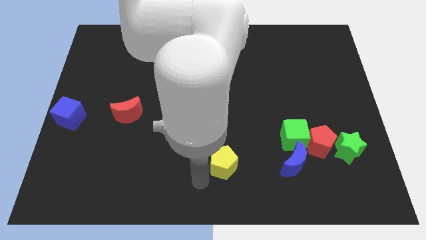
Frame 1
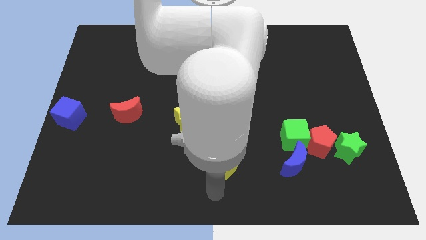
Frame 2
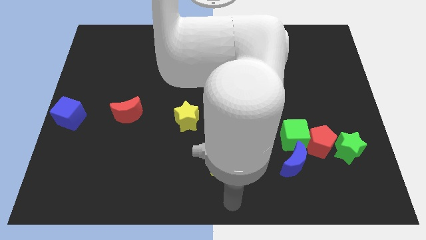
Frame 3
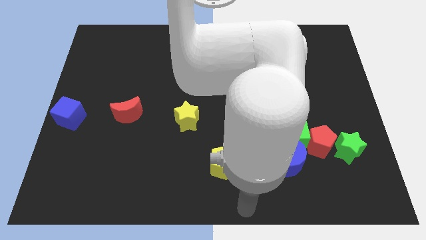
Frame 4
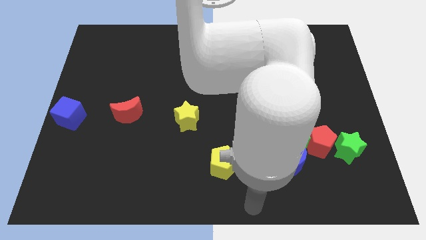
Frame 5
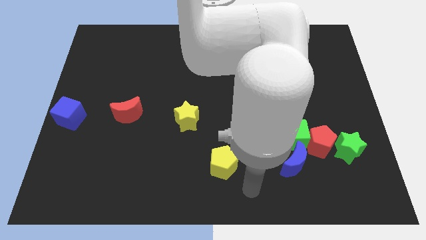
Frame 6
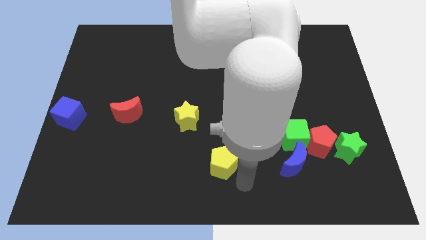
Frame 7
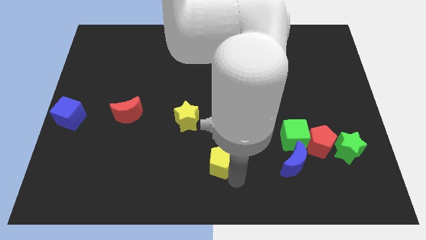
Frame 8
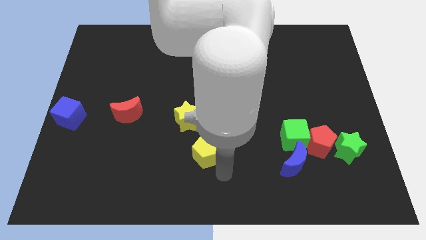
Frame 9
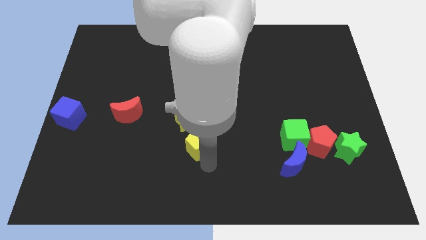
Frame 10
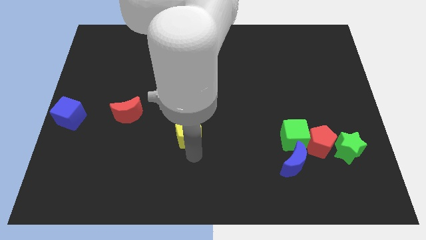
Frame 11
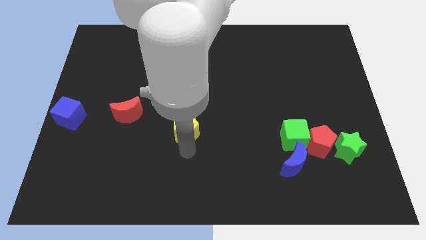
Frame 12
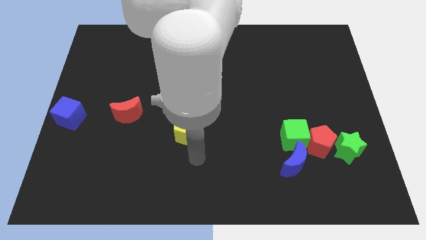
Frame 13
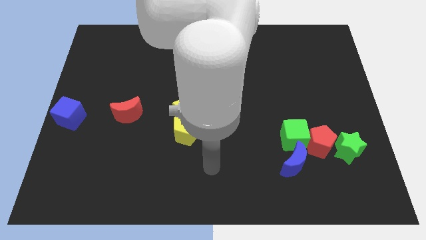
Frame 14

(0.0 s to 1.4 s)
move the yellow pentagon to the bottom side of the yellow star

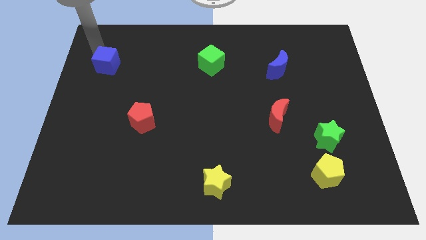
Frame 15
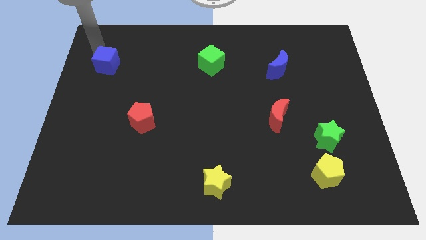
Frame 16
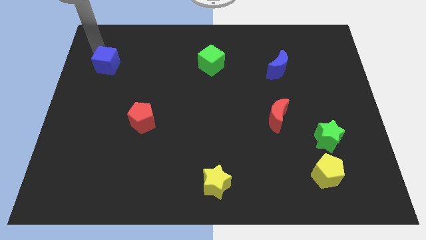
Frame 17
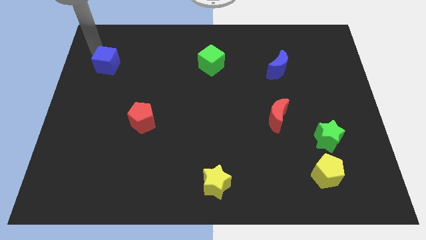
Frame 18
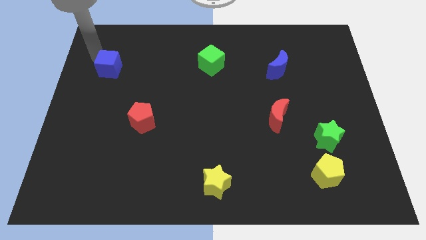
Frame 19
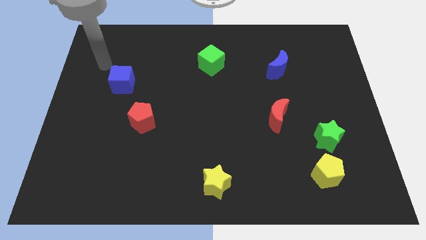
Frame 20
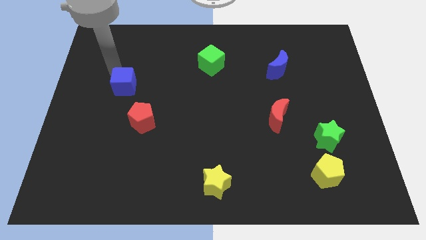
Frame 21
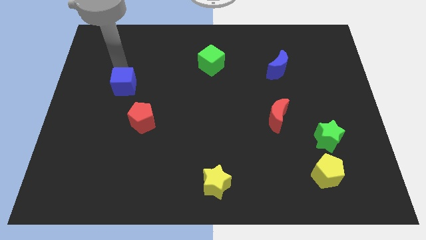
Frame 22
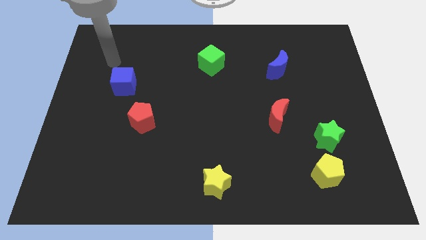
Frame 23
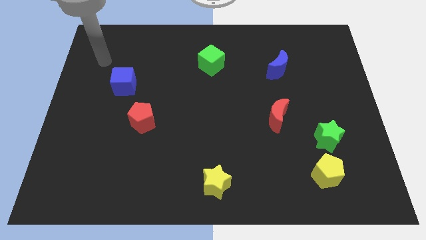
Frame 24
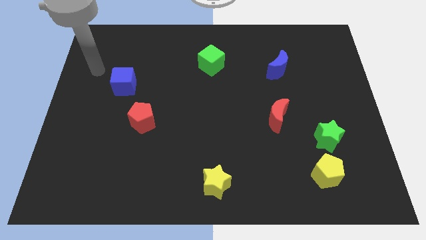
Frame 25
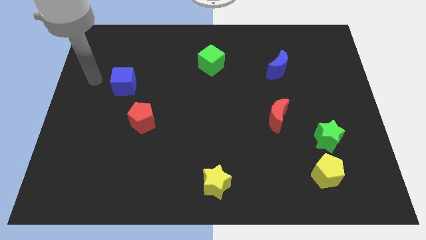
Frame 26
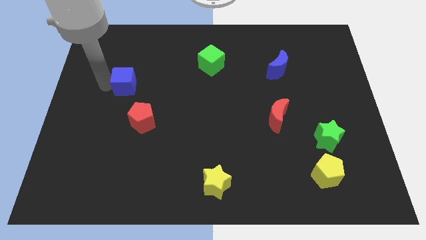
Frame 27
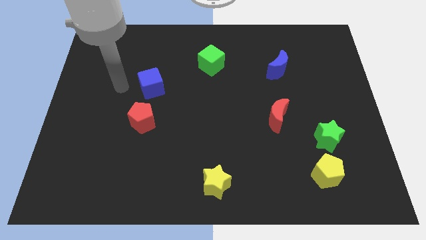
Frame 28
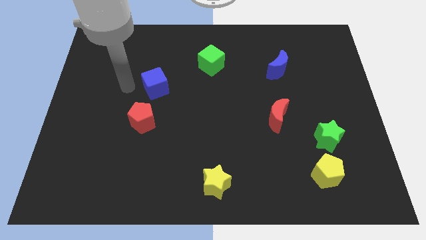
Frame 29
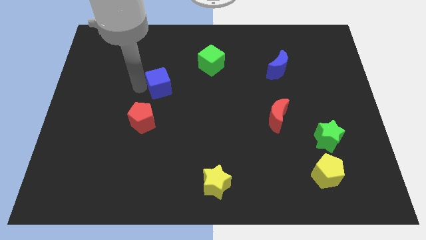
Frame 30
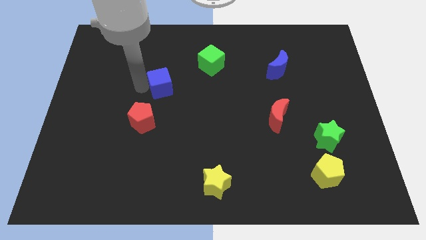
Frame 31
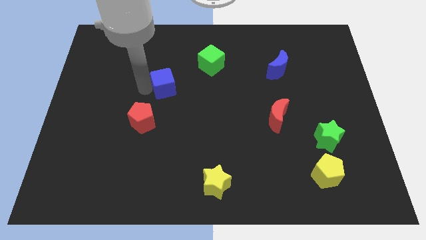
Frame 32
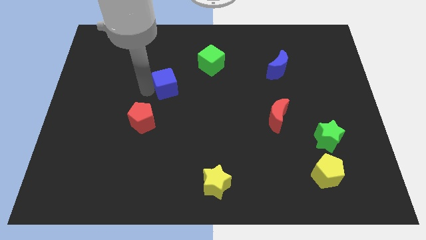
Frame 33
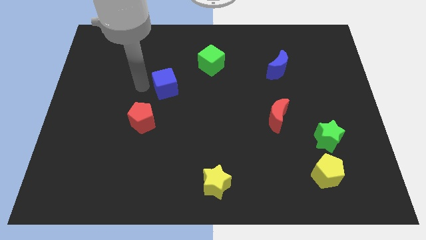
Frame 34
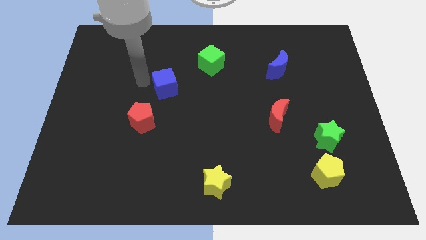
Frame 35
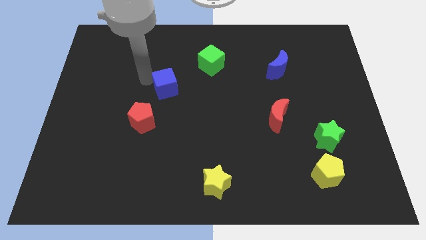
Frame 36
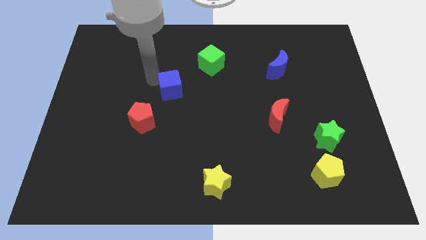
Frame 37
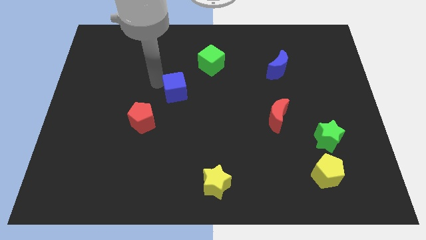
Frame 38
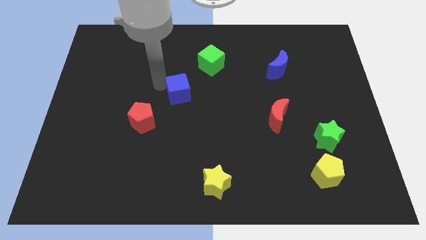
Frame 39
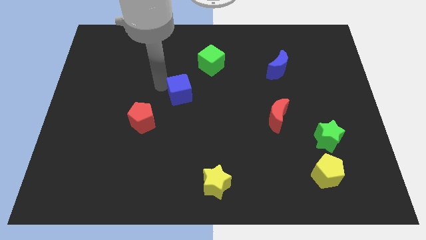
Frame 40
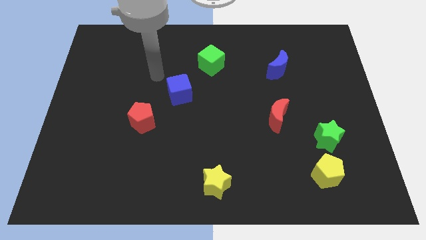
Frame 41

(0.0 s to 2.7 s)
push the blue cube diagonally in between the green cube and the red pentagon

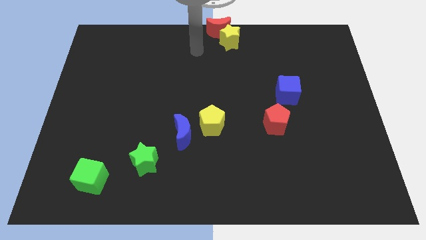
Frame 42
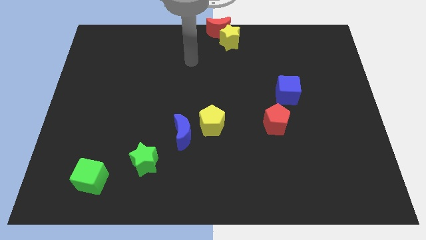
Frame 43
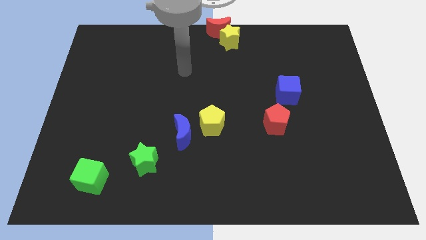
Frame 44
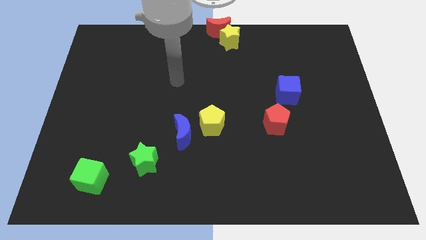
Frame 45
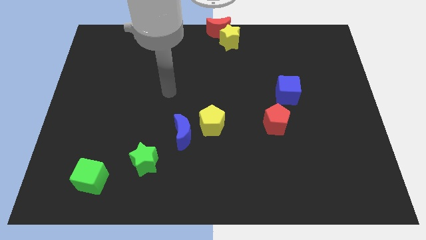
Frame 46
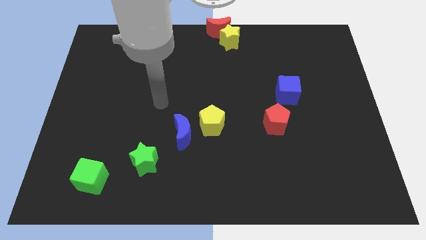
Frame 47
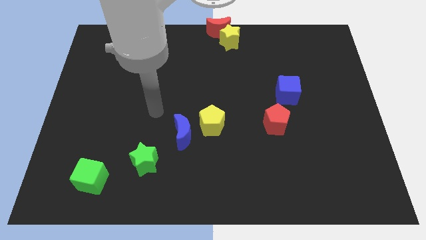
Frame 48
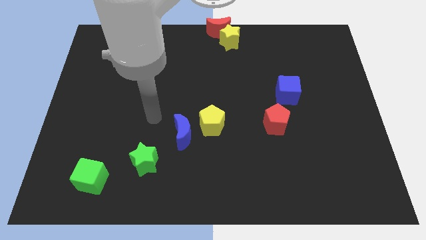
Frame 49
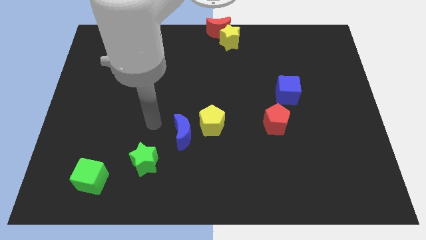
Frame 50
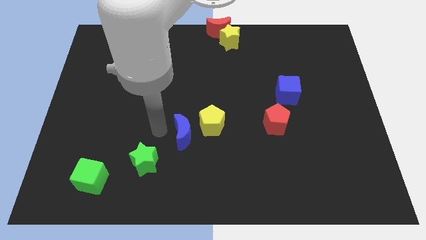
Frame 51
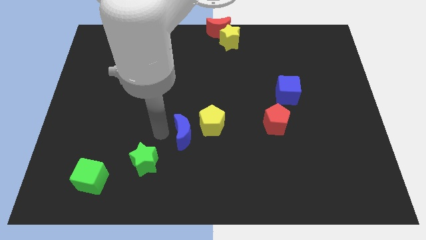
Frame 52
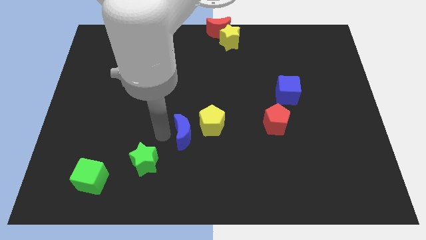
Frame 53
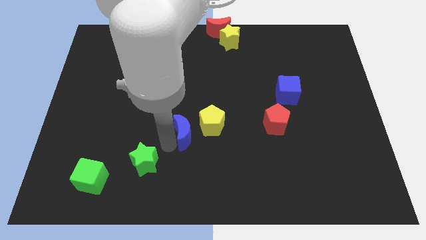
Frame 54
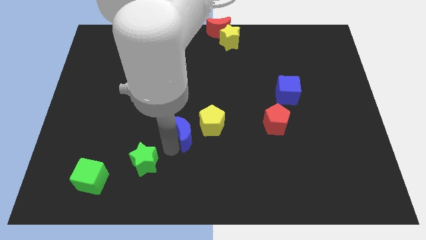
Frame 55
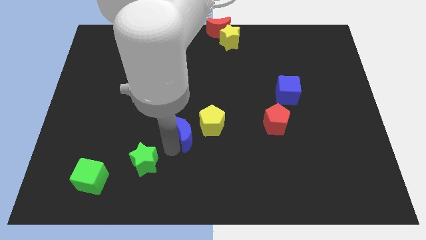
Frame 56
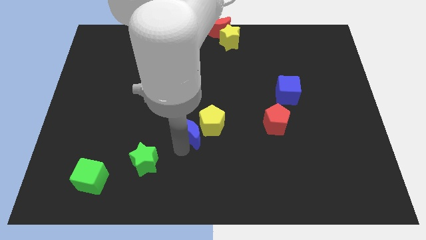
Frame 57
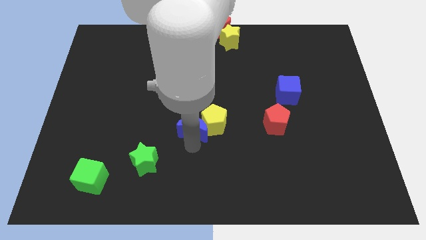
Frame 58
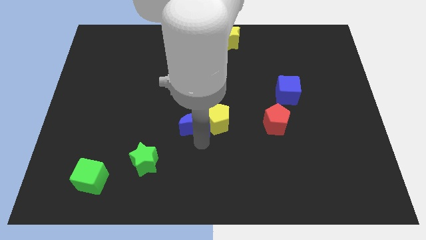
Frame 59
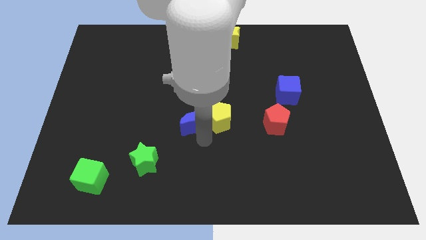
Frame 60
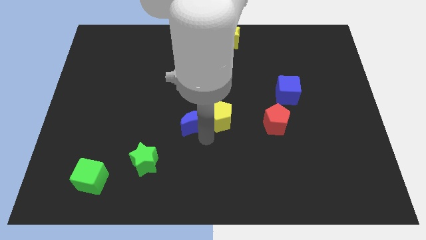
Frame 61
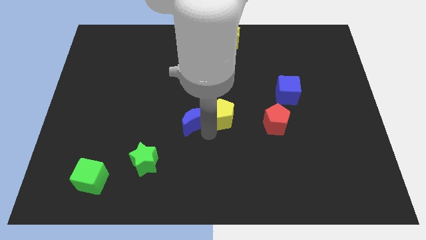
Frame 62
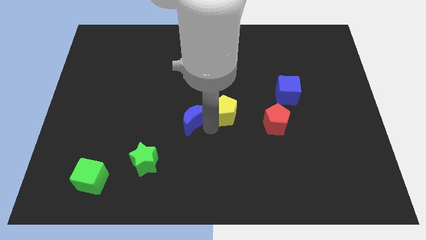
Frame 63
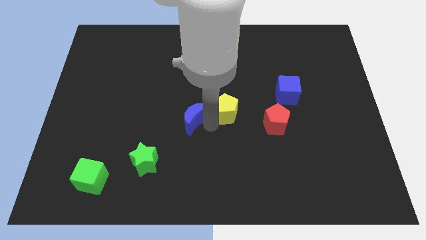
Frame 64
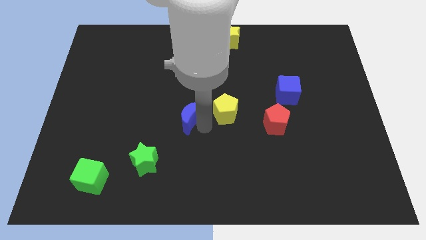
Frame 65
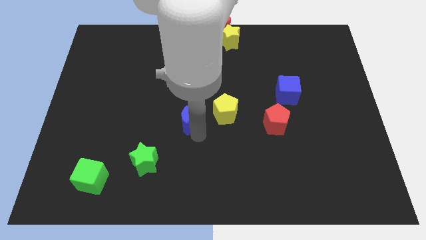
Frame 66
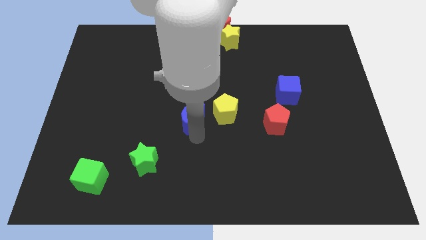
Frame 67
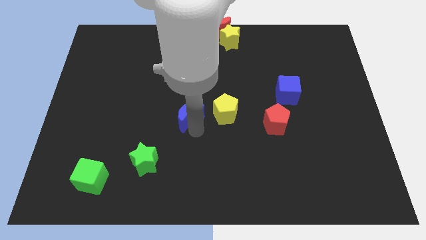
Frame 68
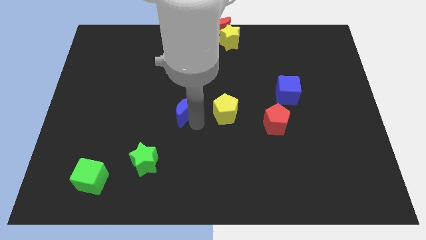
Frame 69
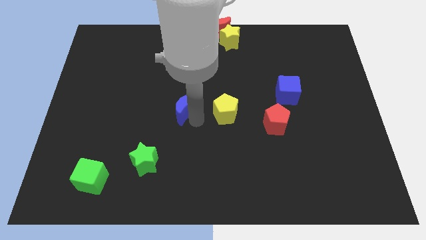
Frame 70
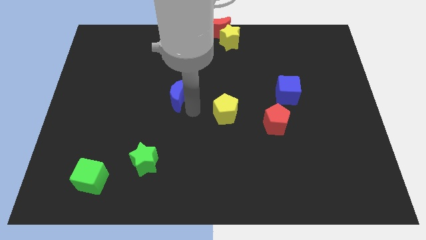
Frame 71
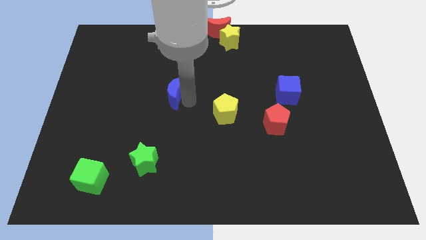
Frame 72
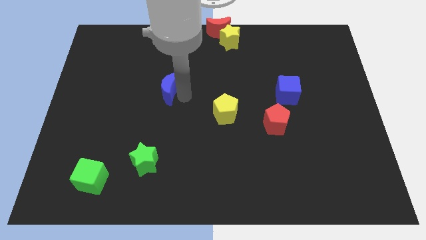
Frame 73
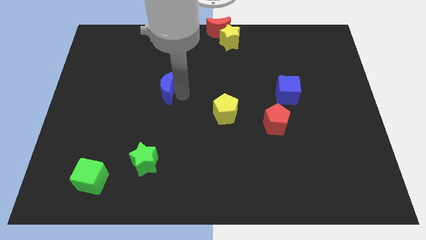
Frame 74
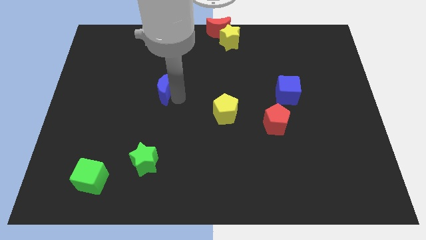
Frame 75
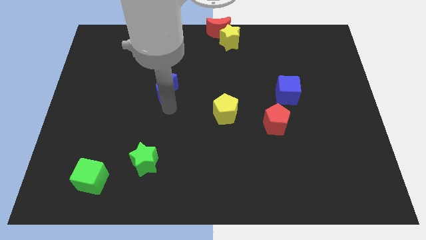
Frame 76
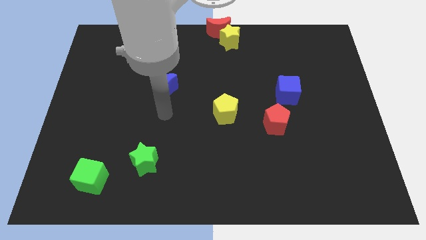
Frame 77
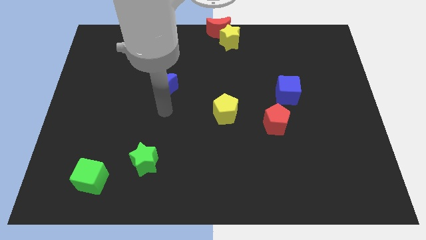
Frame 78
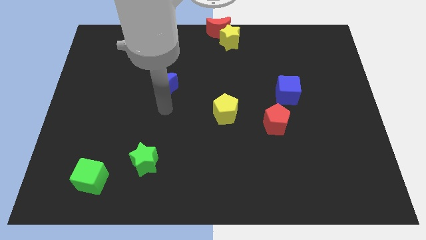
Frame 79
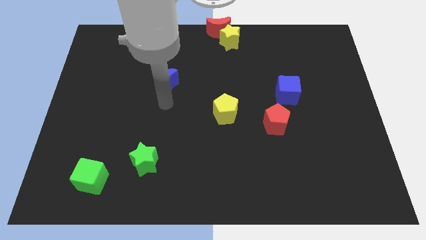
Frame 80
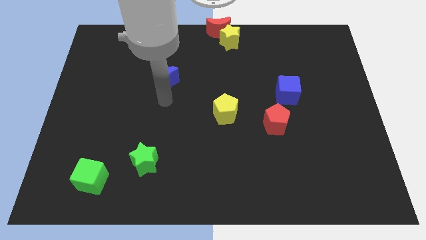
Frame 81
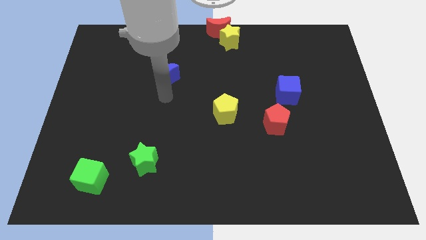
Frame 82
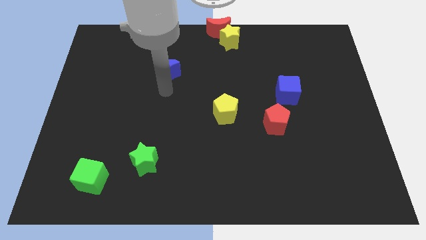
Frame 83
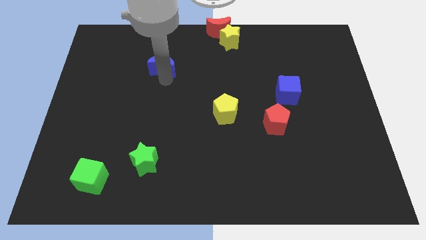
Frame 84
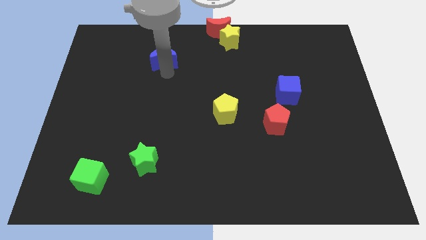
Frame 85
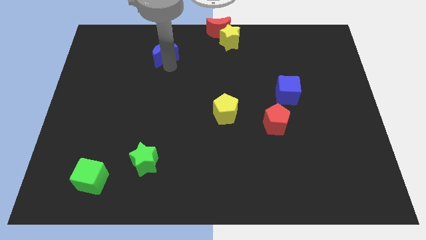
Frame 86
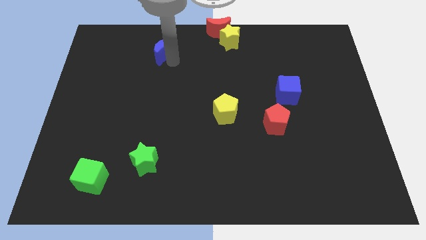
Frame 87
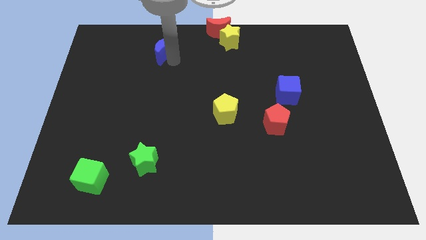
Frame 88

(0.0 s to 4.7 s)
move blue crescent upwards

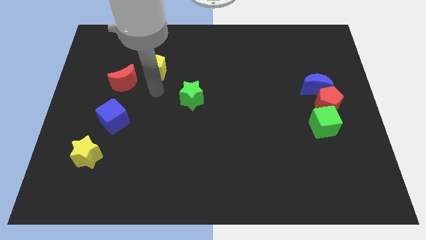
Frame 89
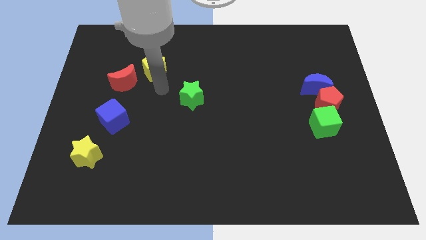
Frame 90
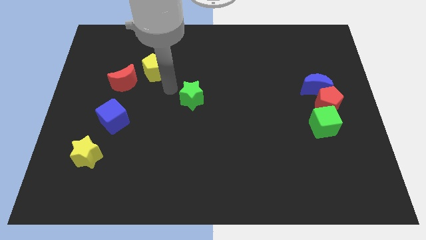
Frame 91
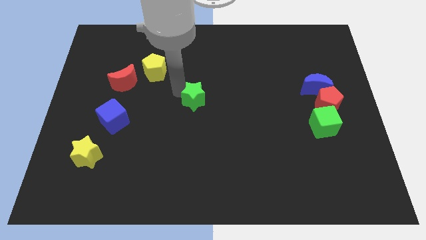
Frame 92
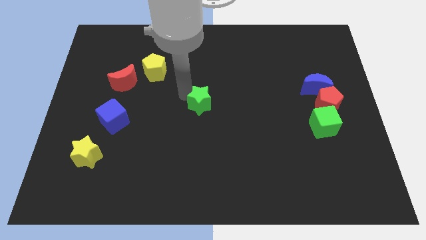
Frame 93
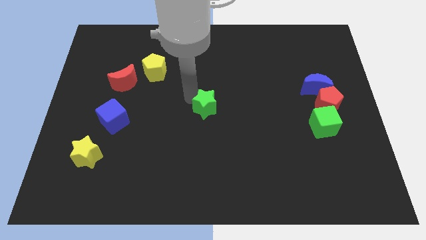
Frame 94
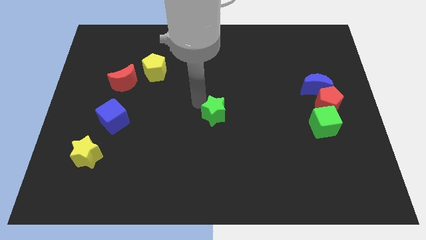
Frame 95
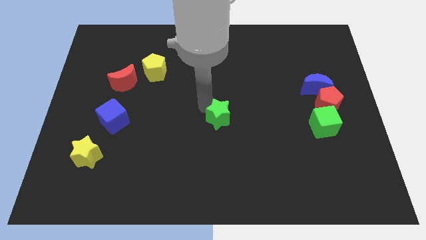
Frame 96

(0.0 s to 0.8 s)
move green star to center
